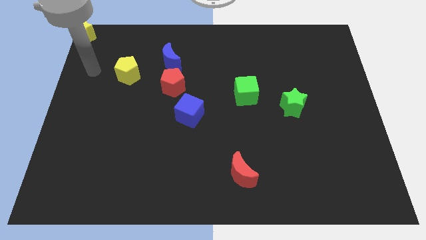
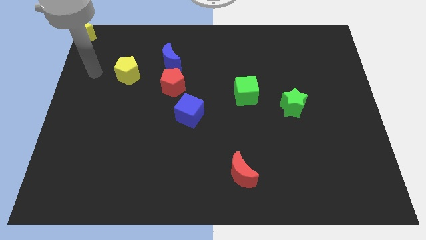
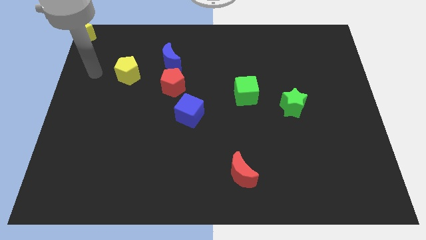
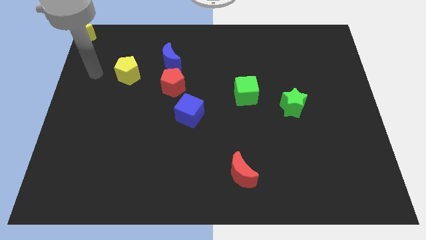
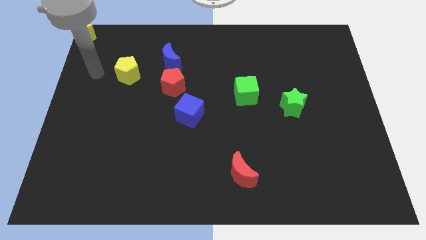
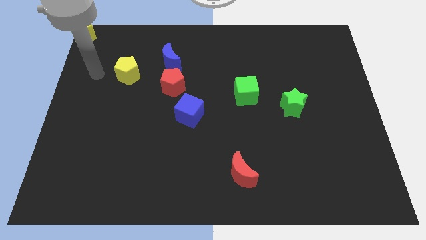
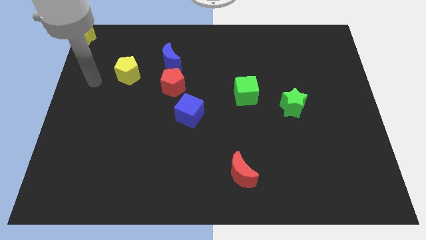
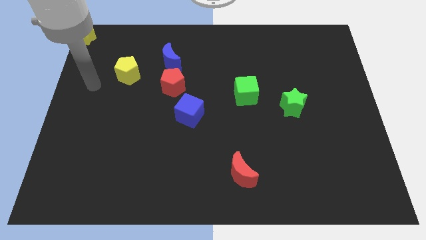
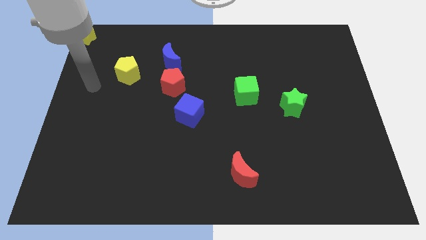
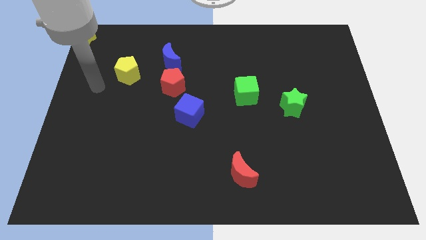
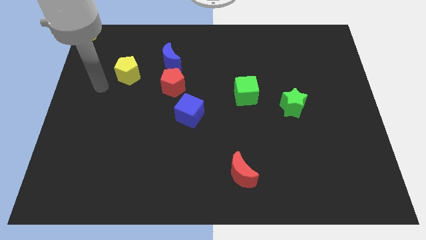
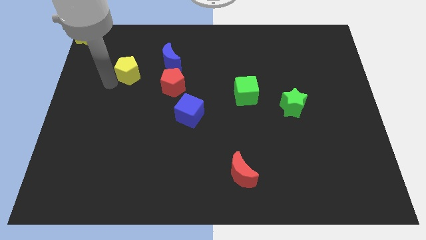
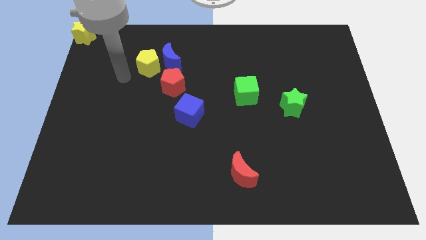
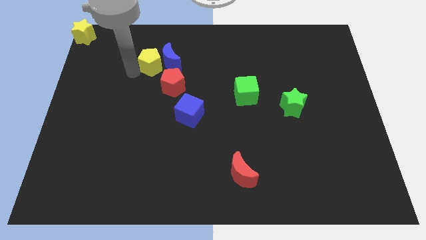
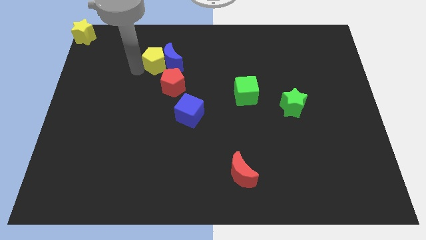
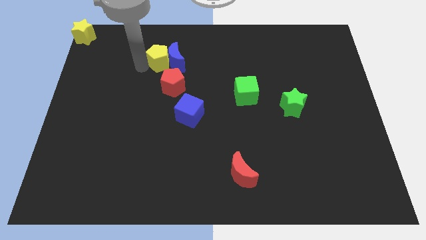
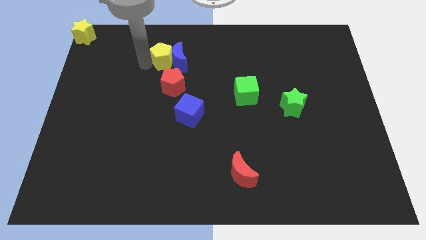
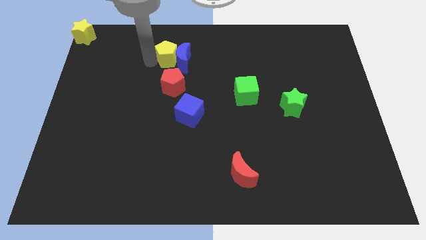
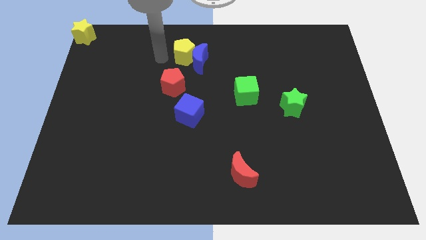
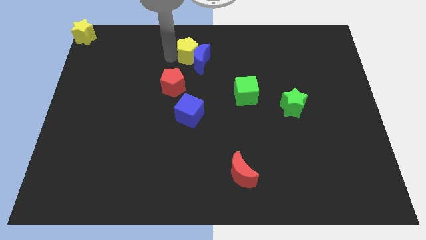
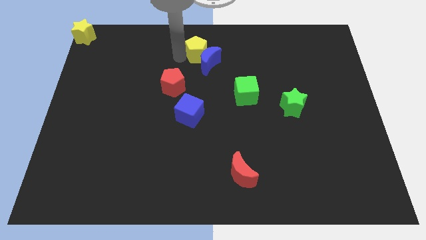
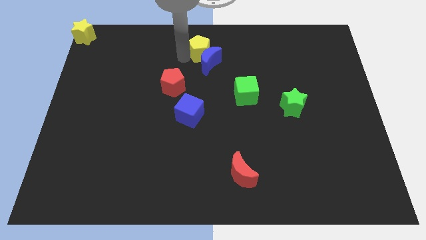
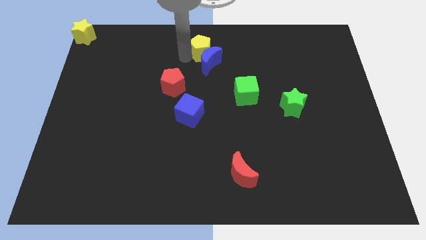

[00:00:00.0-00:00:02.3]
push the yellow pentagon into the blue moon

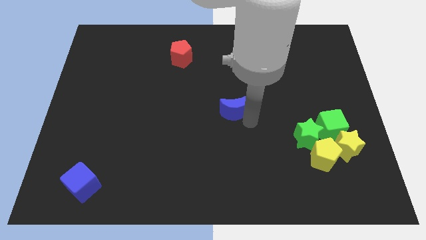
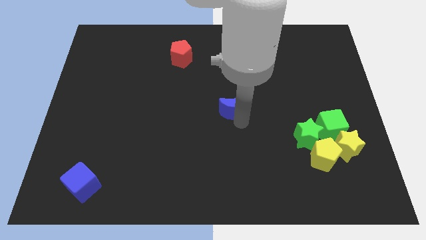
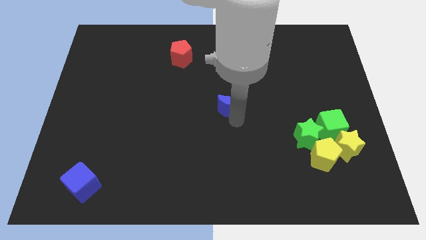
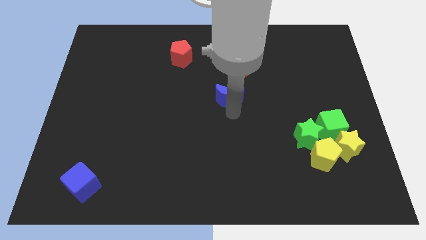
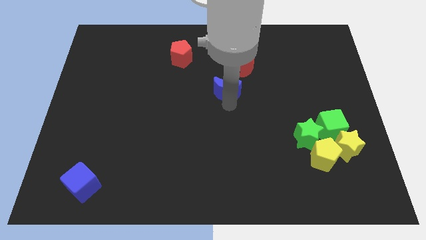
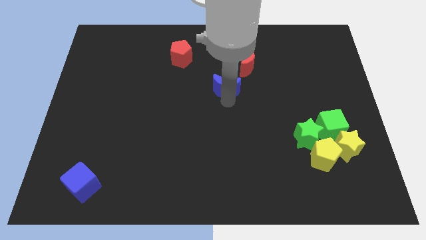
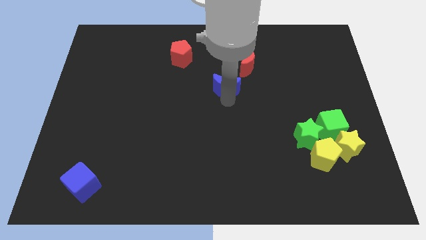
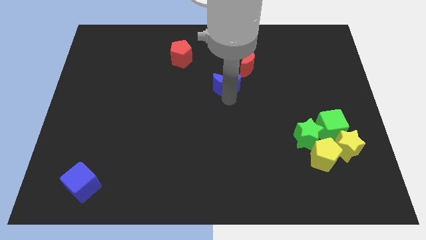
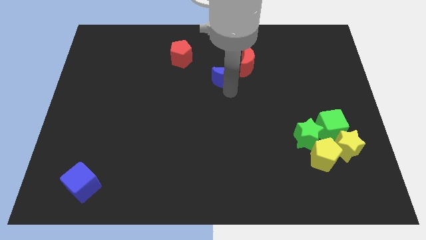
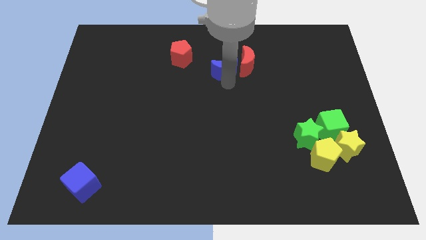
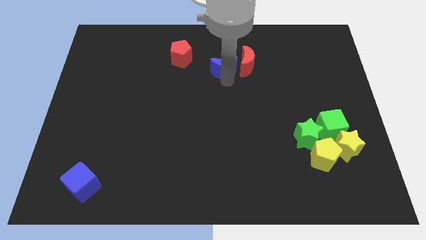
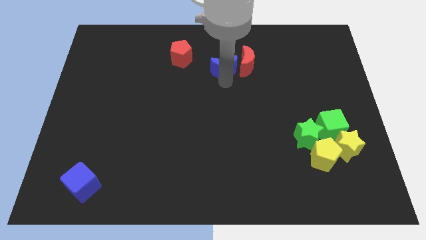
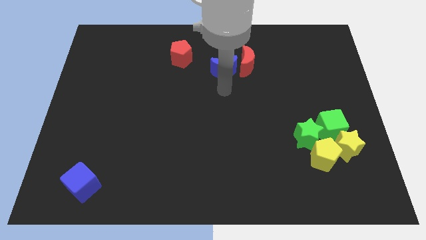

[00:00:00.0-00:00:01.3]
move the blue crescent to the left side of the red crescent

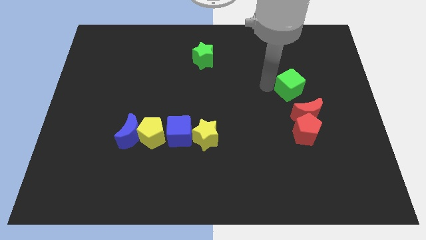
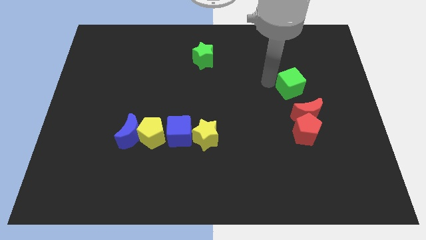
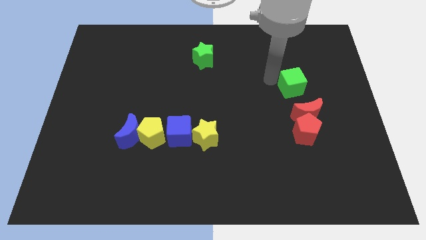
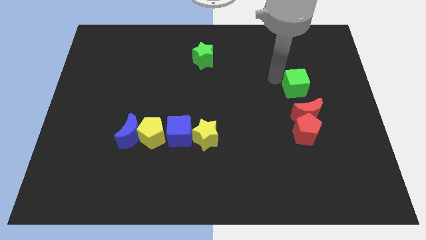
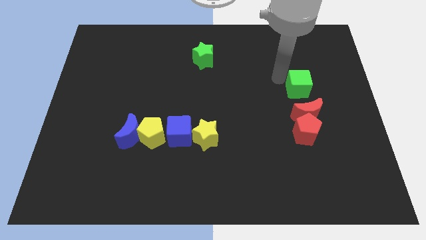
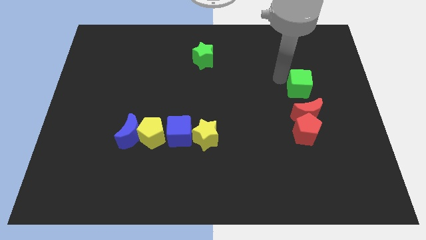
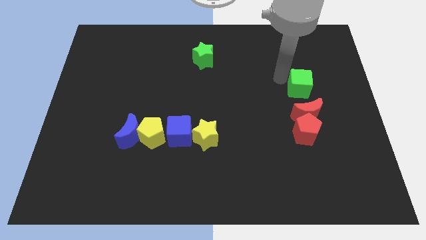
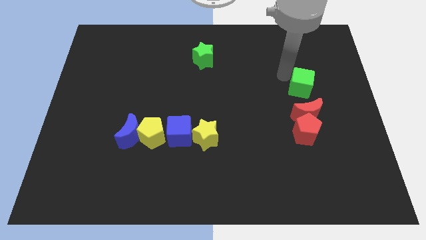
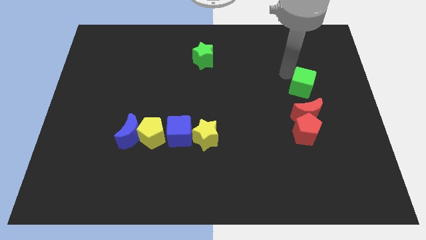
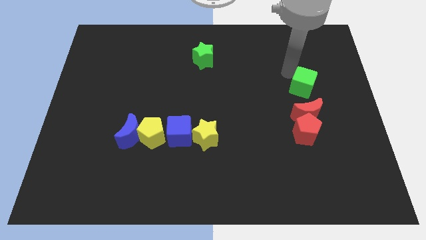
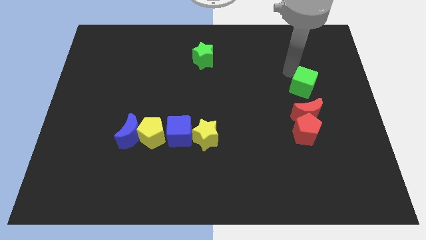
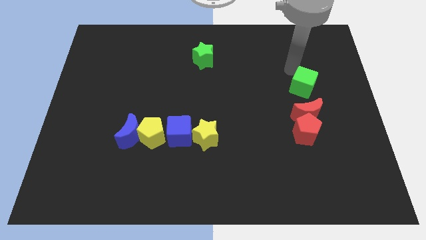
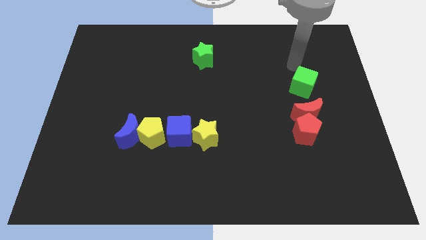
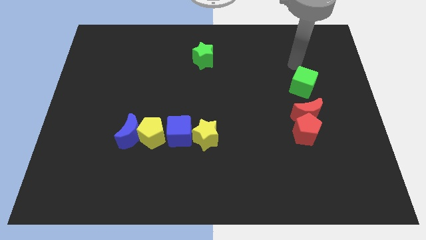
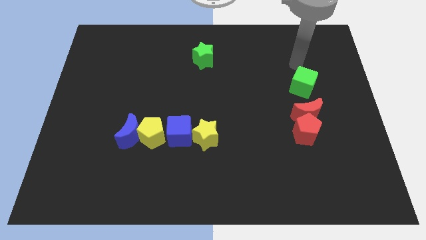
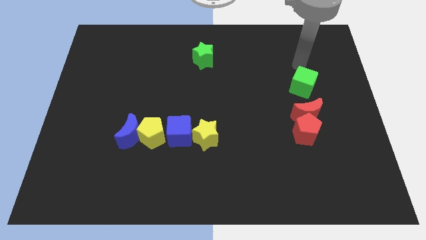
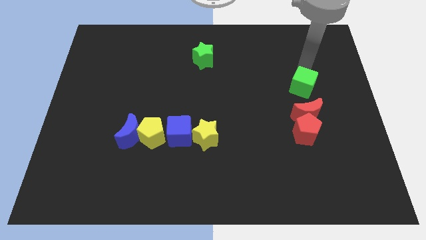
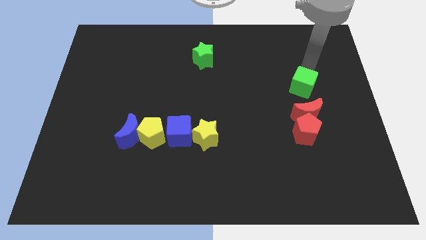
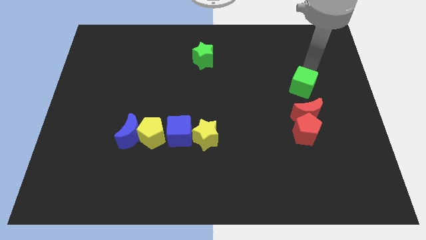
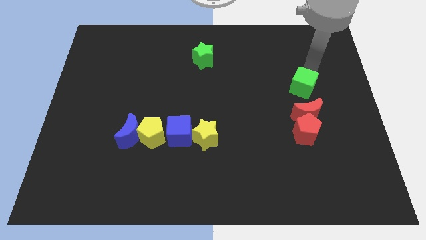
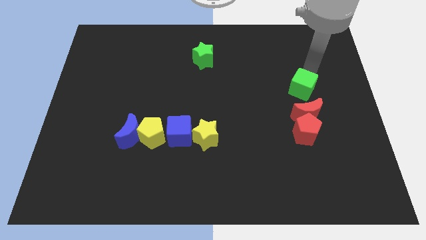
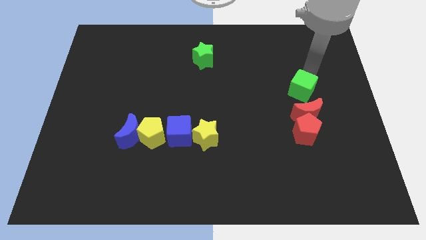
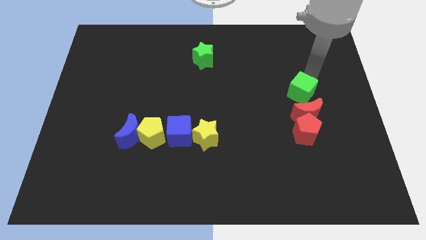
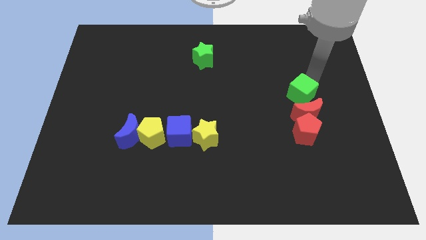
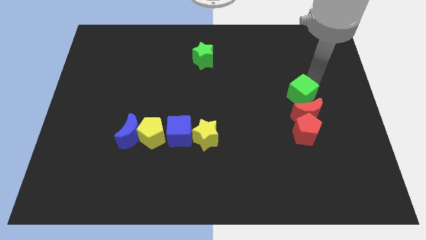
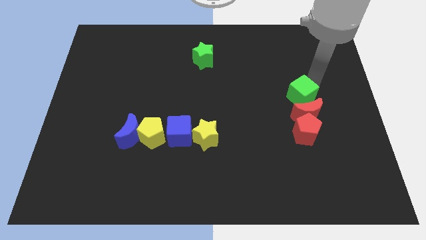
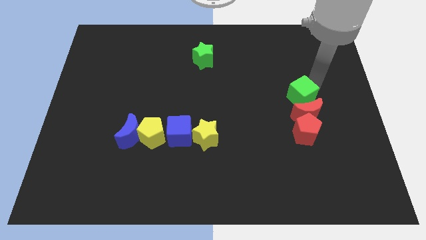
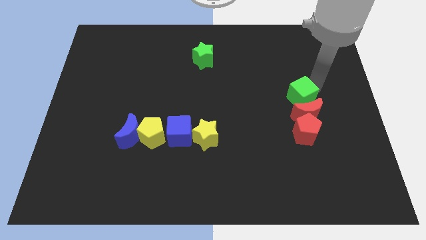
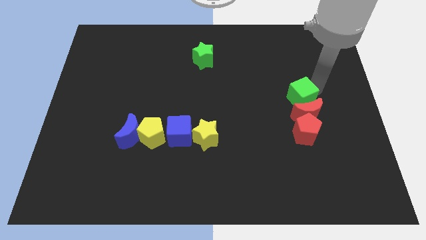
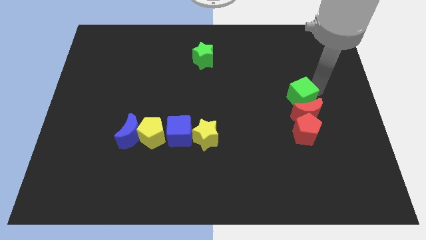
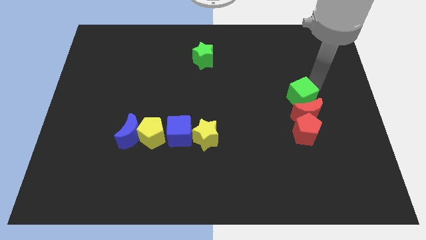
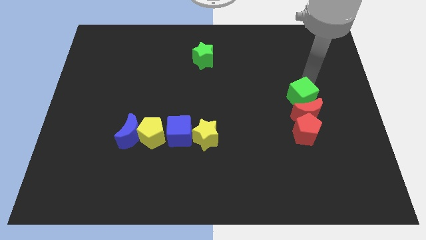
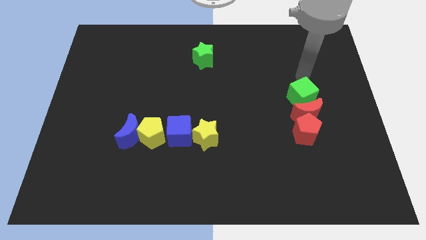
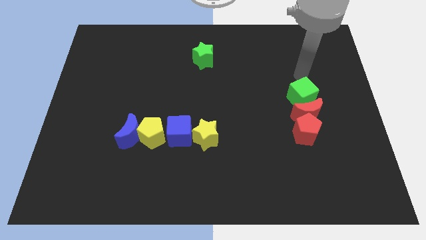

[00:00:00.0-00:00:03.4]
move green cube close to the red moon

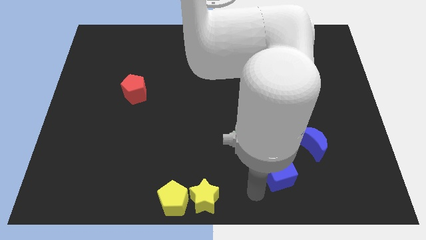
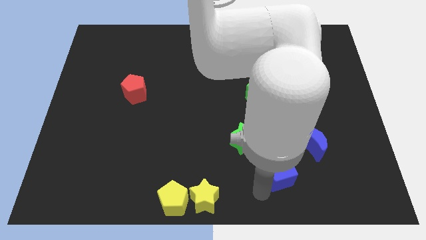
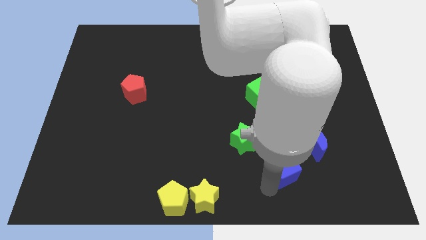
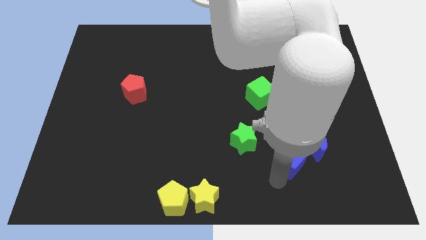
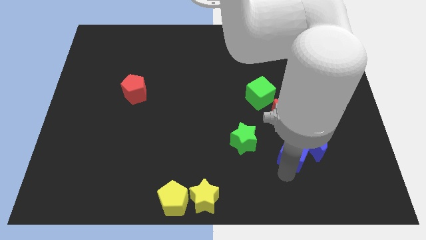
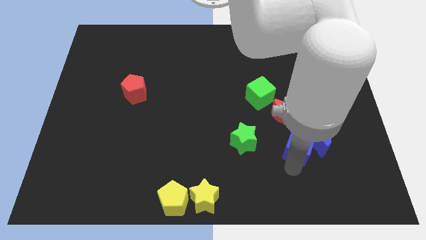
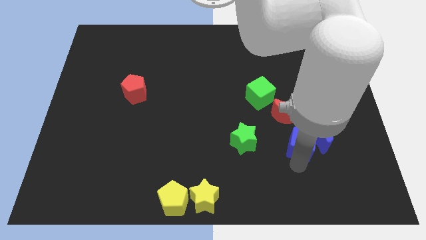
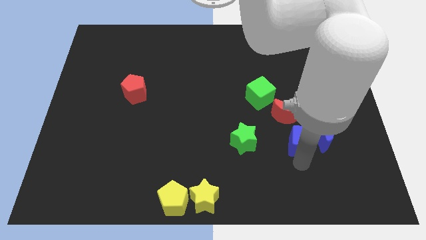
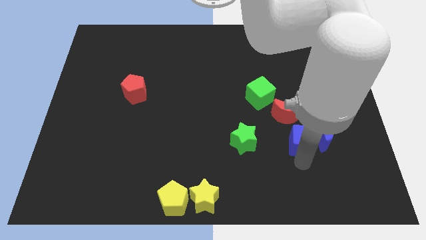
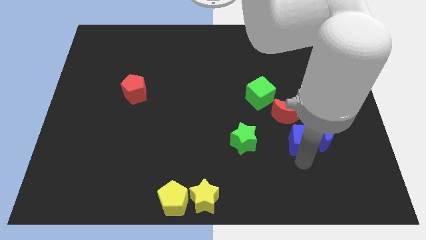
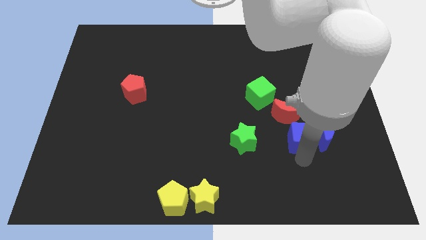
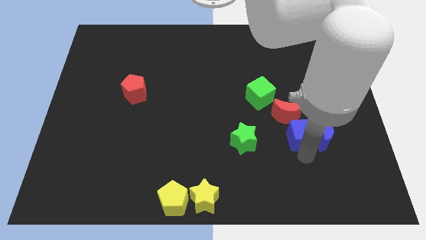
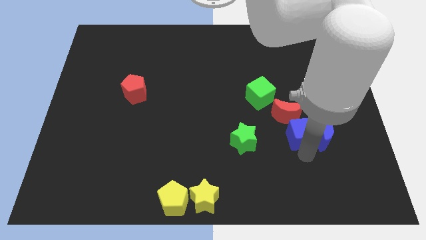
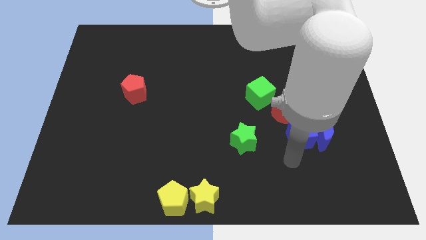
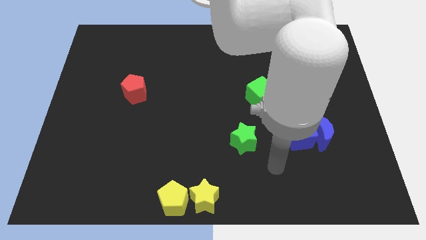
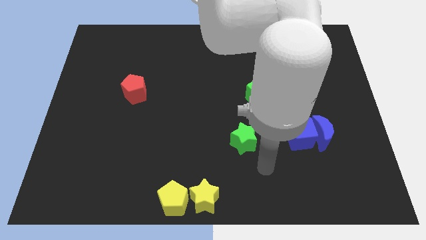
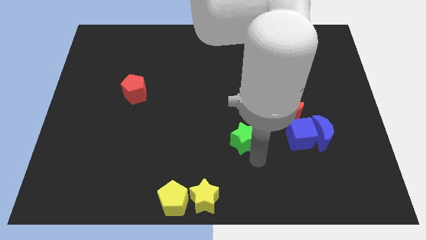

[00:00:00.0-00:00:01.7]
move the blue cube into the blue moon

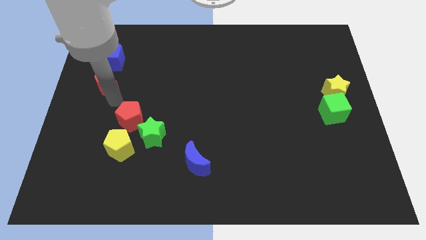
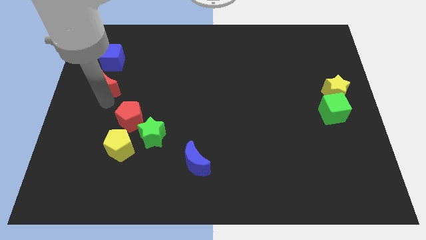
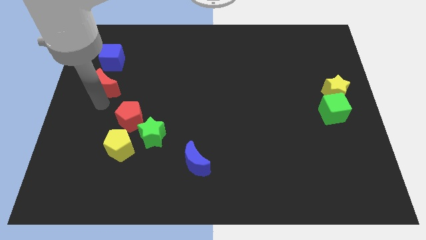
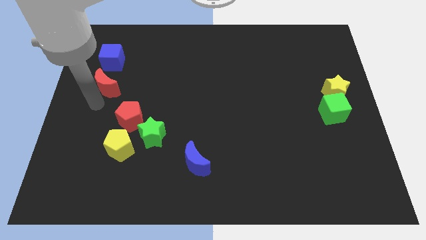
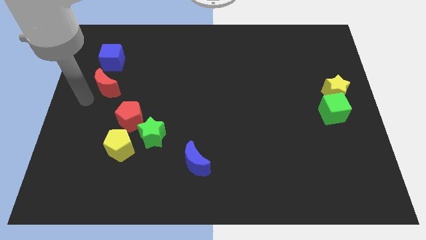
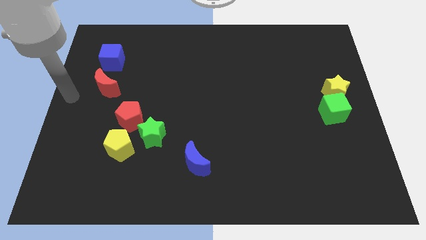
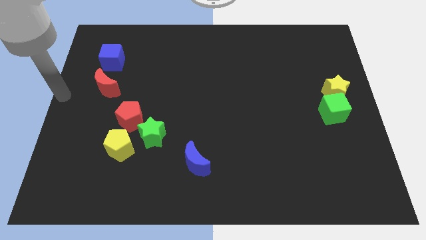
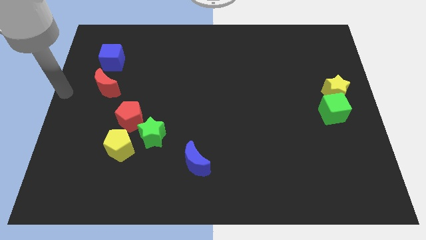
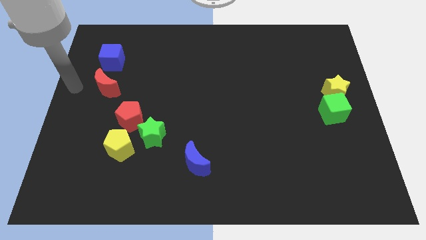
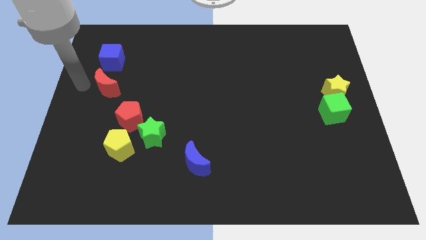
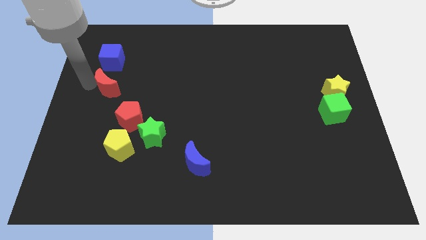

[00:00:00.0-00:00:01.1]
place your arm to the left side of red crescent
